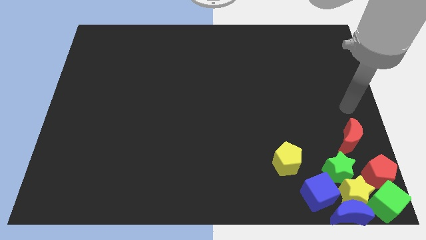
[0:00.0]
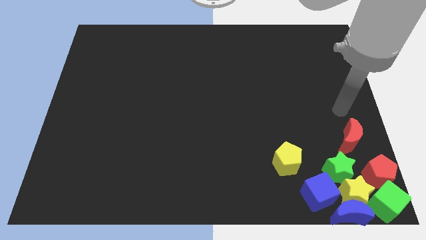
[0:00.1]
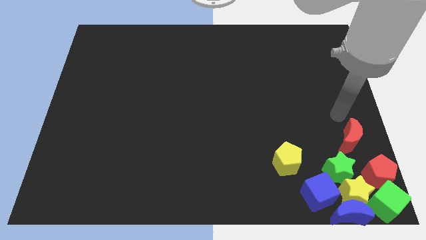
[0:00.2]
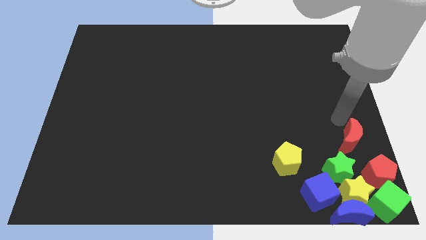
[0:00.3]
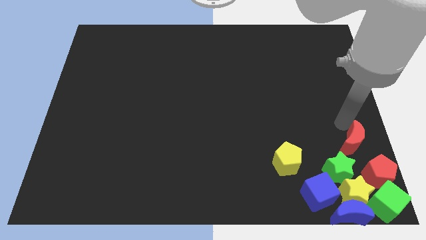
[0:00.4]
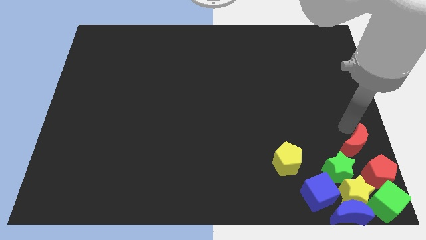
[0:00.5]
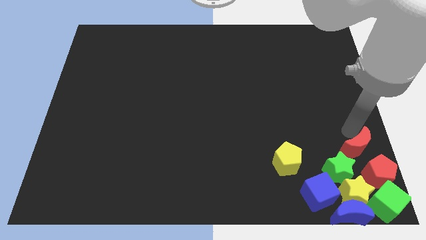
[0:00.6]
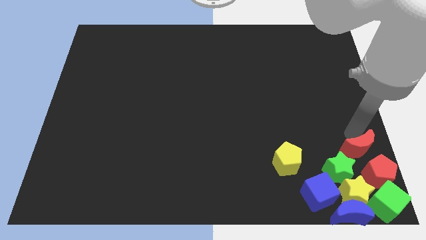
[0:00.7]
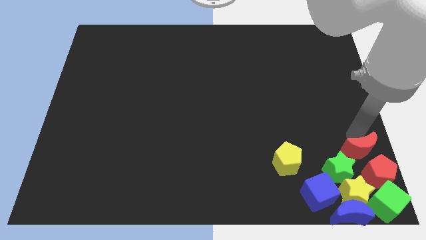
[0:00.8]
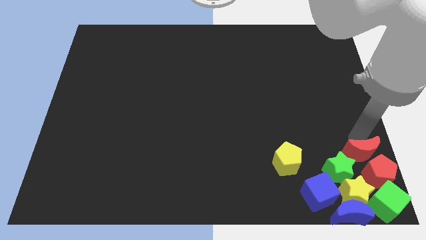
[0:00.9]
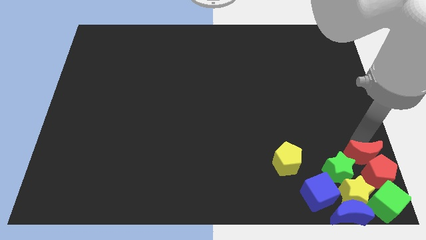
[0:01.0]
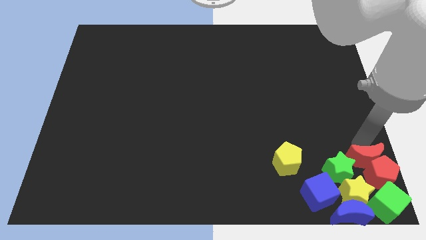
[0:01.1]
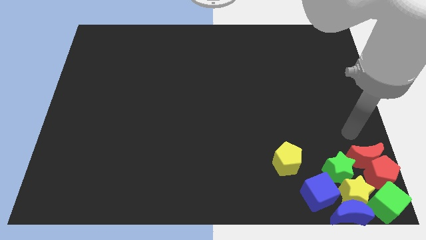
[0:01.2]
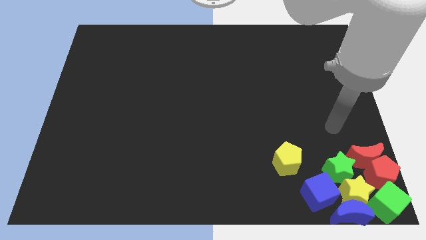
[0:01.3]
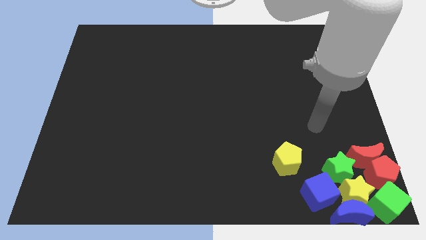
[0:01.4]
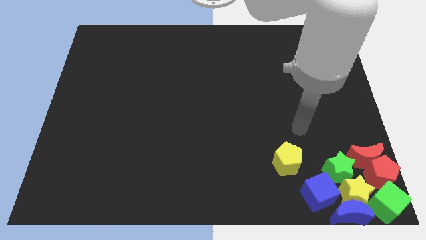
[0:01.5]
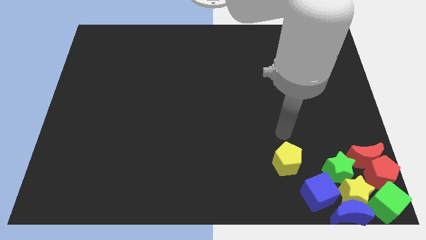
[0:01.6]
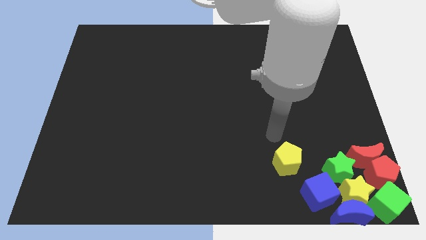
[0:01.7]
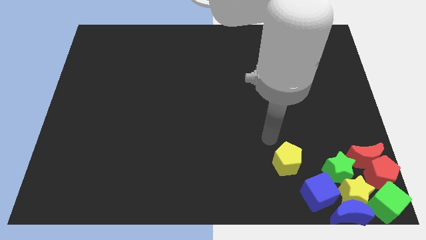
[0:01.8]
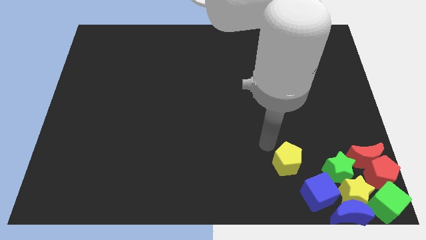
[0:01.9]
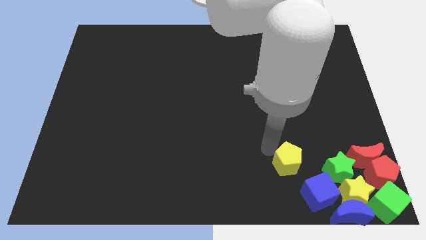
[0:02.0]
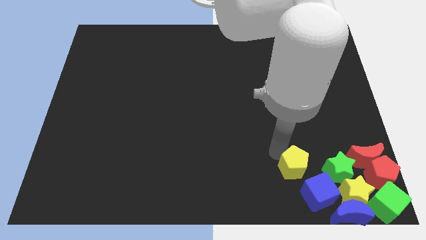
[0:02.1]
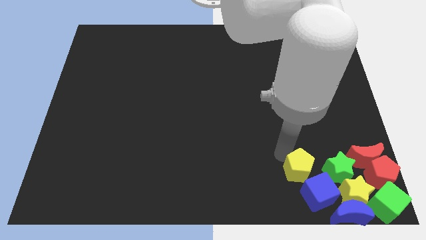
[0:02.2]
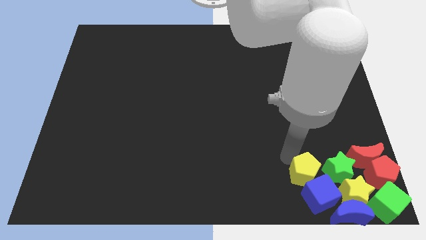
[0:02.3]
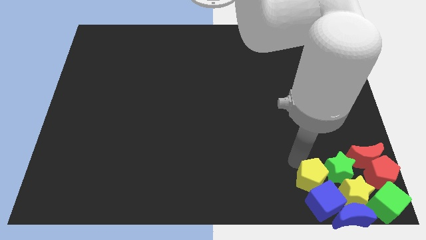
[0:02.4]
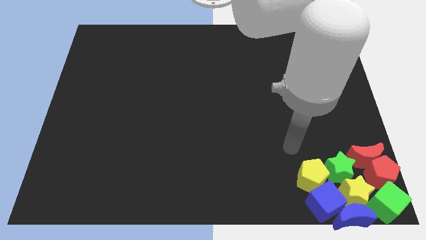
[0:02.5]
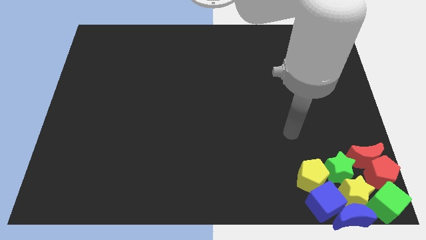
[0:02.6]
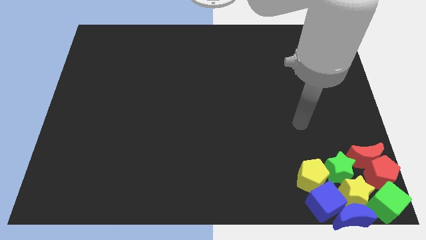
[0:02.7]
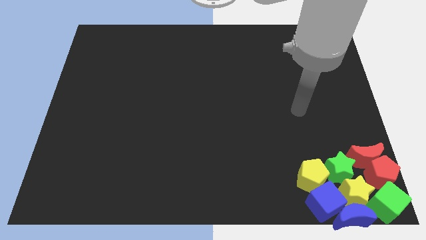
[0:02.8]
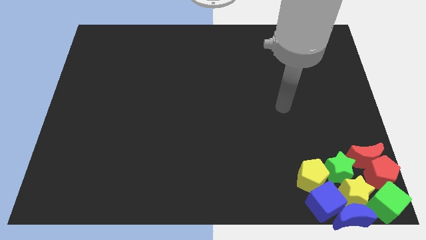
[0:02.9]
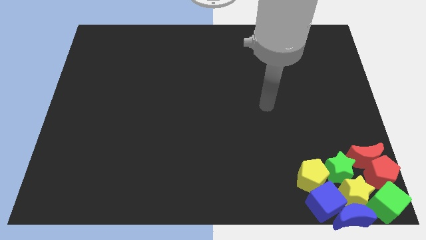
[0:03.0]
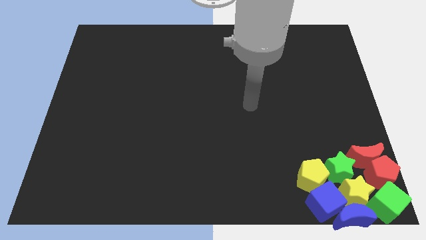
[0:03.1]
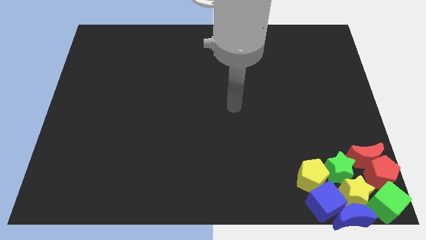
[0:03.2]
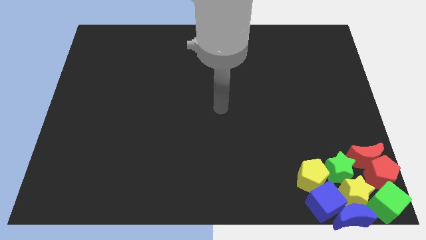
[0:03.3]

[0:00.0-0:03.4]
make all the blocks touch

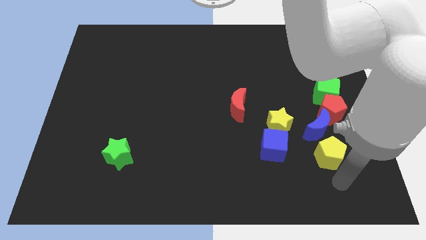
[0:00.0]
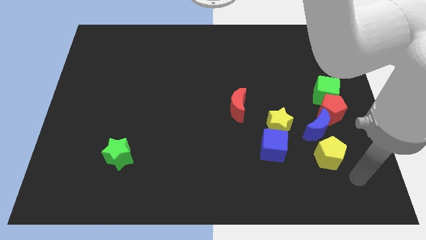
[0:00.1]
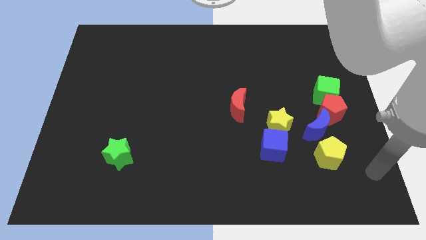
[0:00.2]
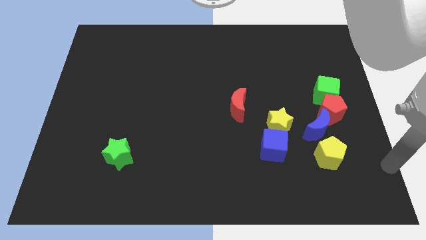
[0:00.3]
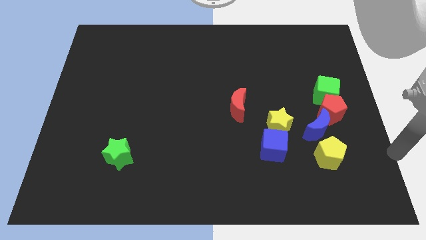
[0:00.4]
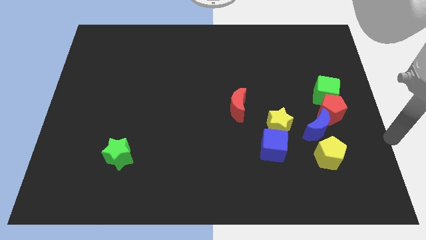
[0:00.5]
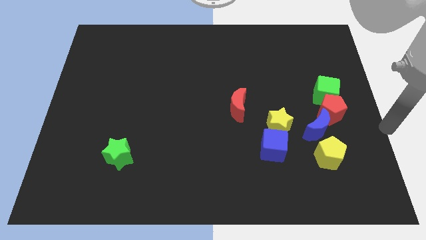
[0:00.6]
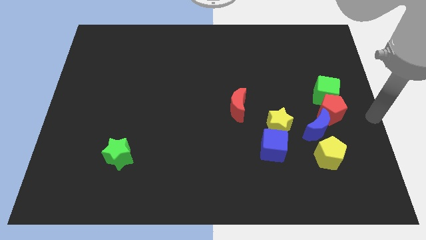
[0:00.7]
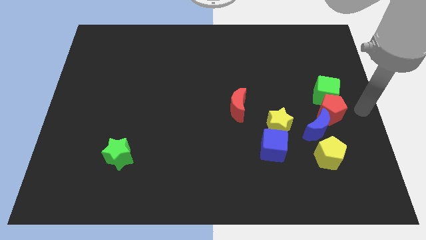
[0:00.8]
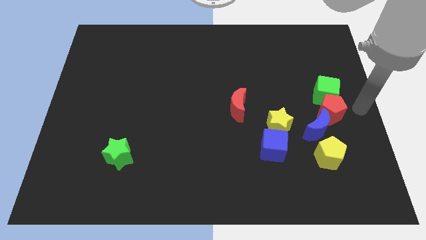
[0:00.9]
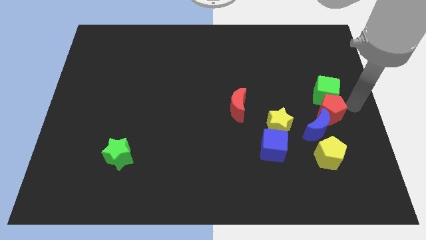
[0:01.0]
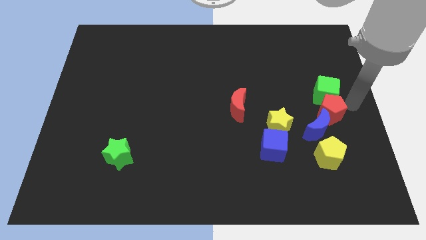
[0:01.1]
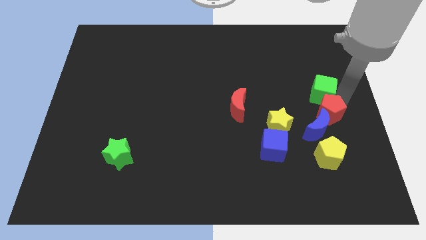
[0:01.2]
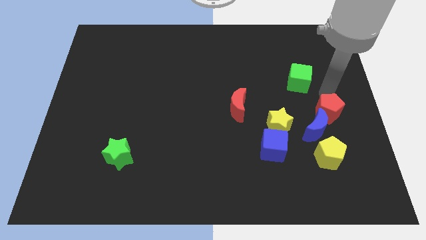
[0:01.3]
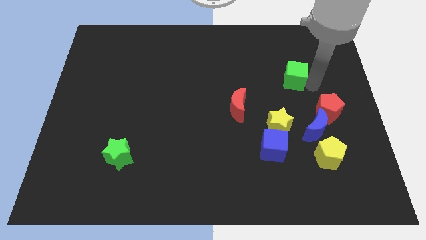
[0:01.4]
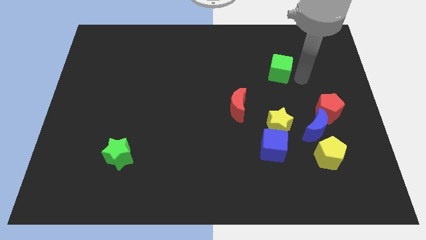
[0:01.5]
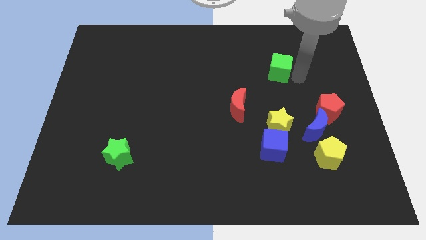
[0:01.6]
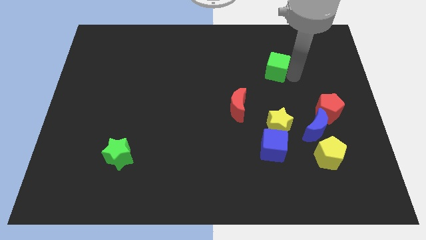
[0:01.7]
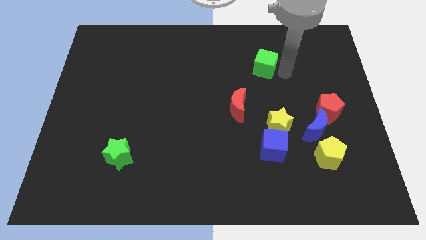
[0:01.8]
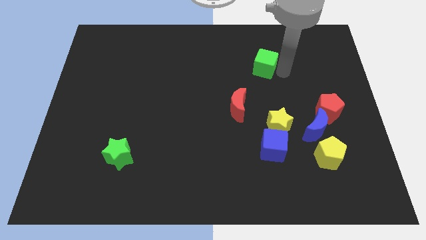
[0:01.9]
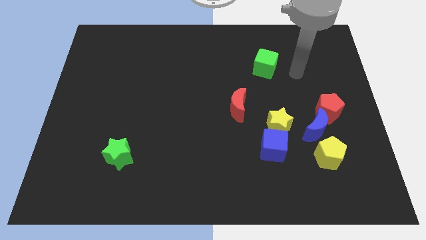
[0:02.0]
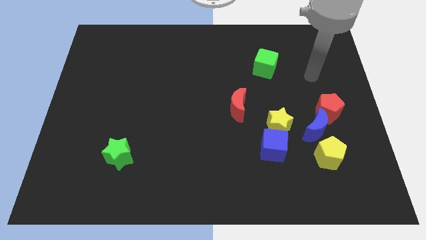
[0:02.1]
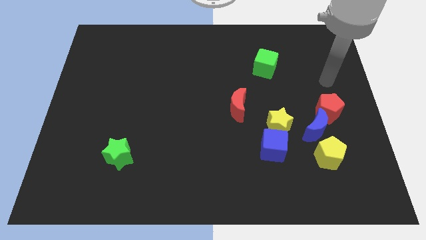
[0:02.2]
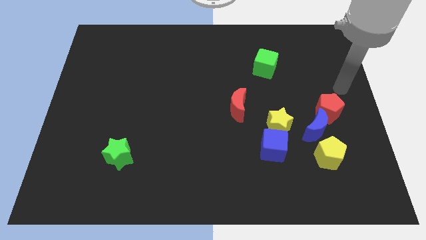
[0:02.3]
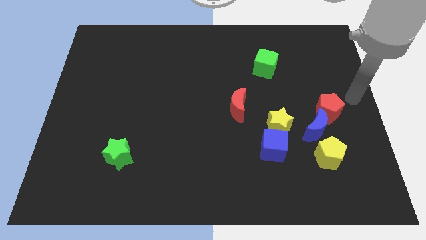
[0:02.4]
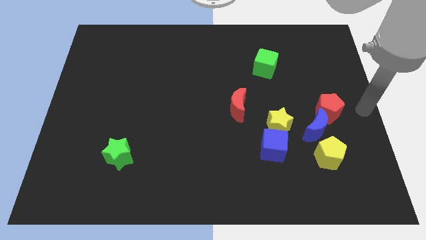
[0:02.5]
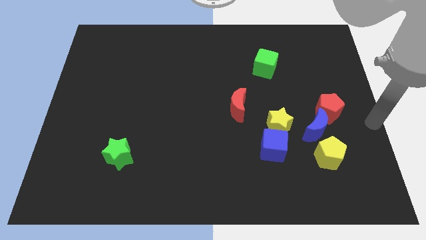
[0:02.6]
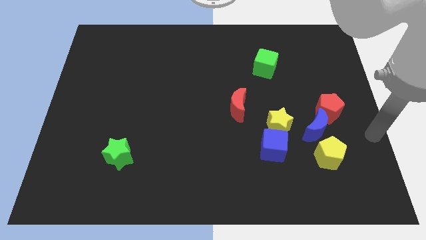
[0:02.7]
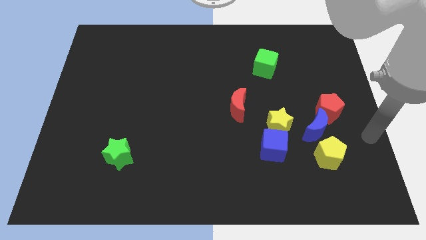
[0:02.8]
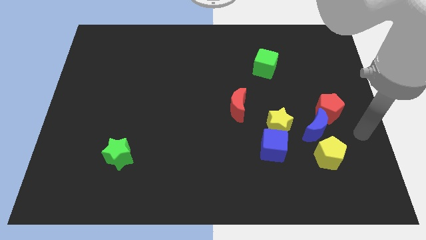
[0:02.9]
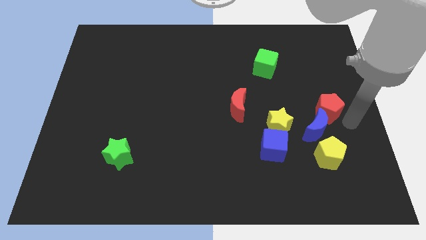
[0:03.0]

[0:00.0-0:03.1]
move the green cube parallel to the red crescent

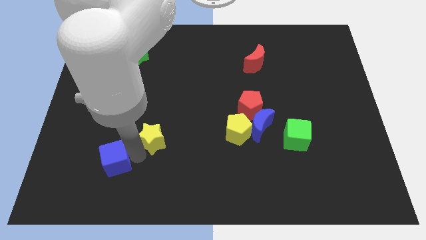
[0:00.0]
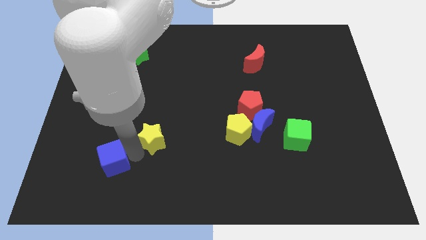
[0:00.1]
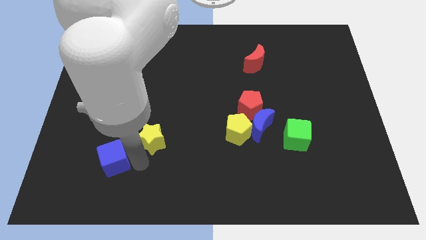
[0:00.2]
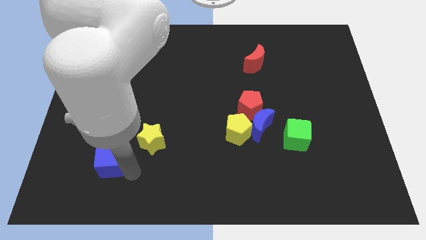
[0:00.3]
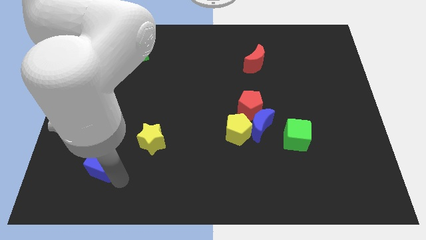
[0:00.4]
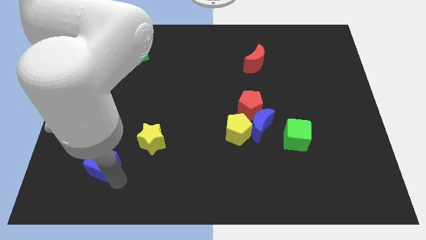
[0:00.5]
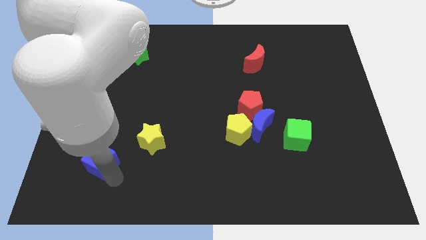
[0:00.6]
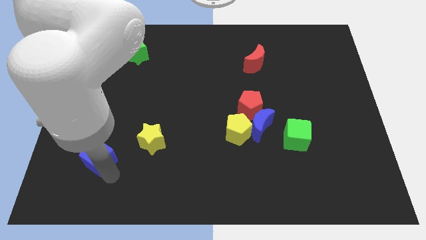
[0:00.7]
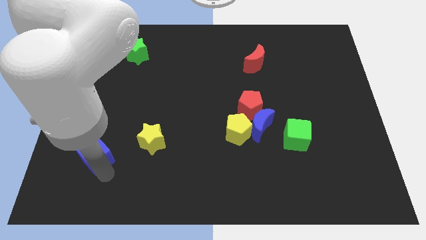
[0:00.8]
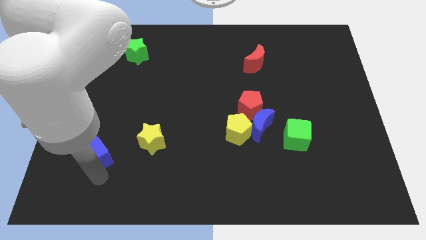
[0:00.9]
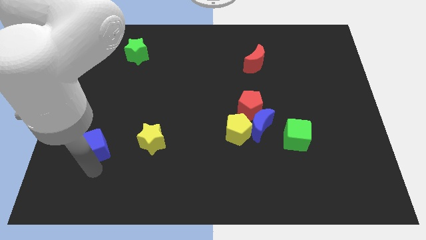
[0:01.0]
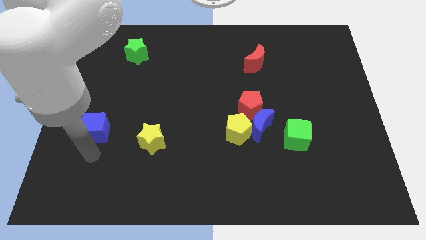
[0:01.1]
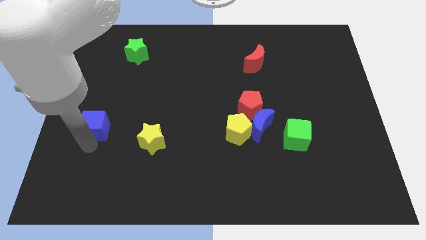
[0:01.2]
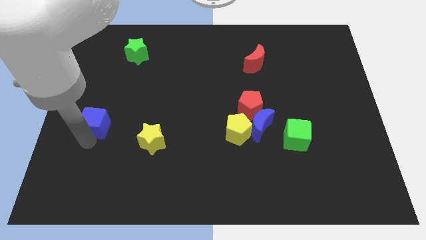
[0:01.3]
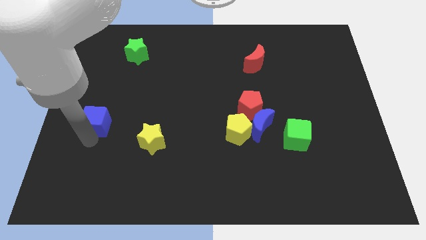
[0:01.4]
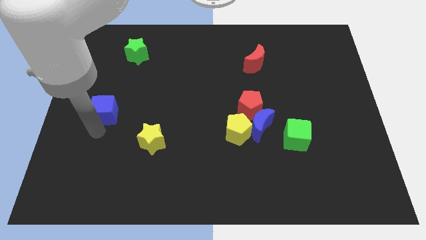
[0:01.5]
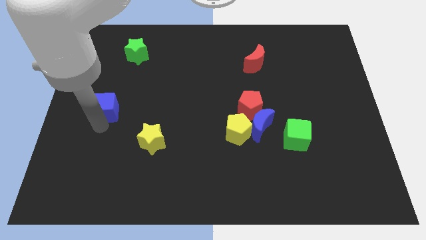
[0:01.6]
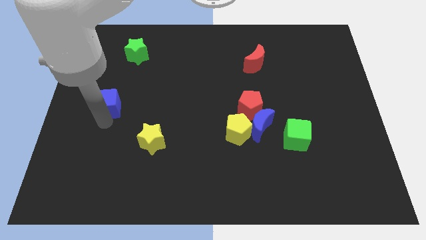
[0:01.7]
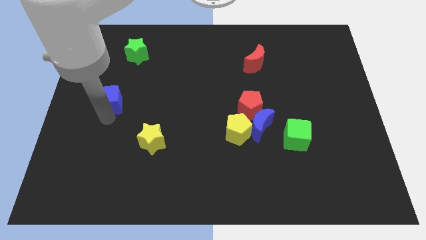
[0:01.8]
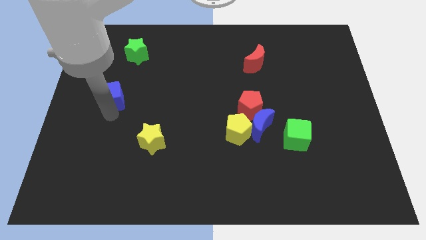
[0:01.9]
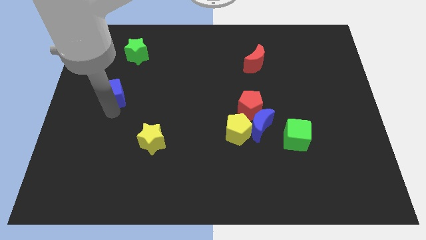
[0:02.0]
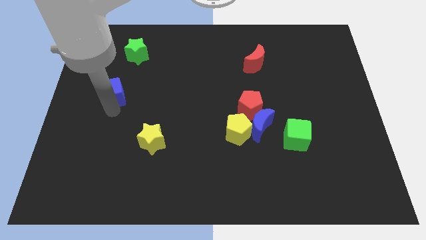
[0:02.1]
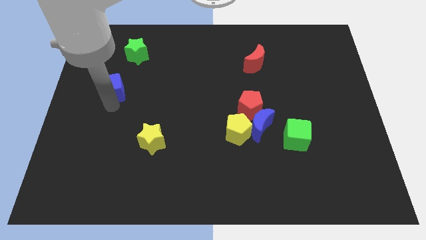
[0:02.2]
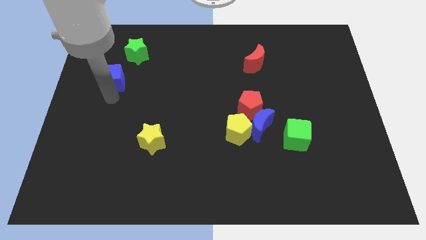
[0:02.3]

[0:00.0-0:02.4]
slide the blue cube towards the green star

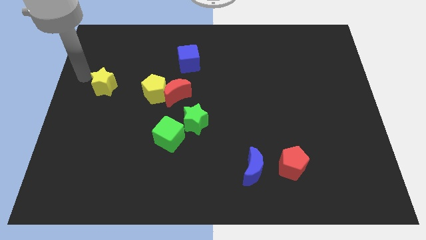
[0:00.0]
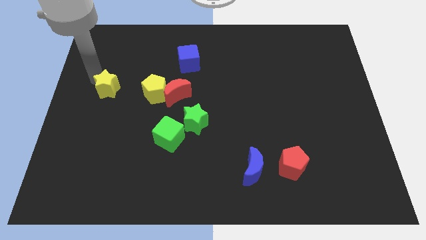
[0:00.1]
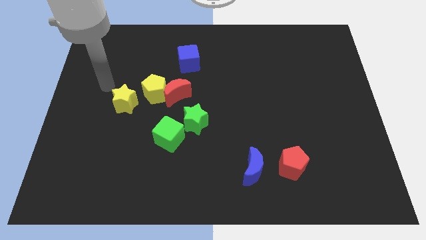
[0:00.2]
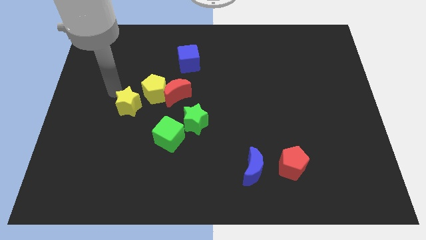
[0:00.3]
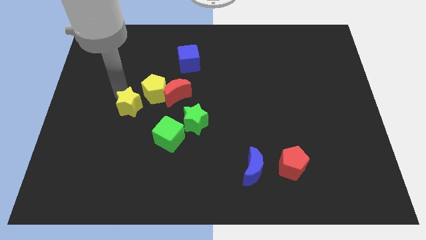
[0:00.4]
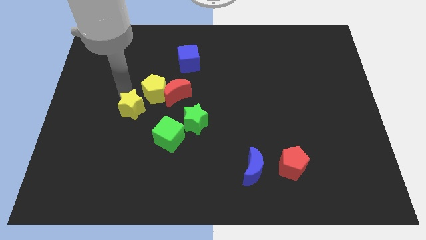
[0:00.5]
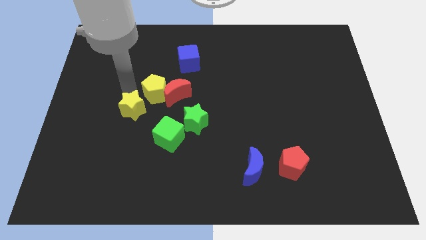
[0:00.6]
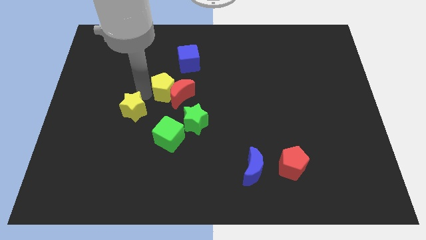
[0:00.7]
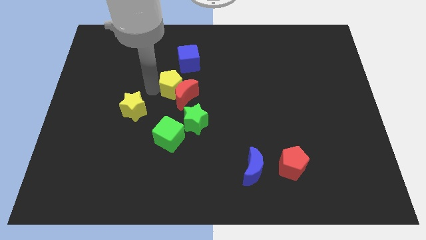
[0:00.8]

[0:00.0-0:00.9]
drag the yellow star and place it below yellow pentagon
